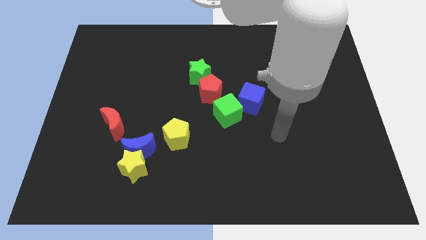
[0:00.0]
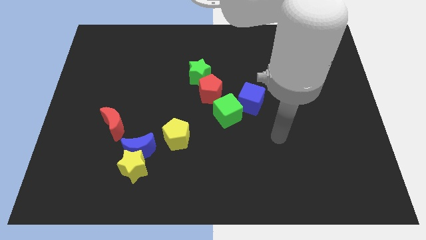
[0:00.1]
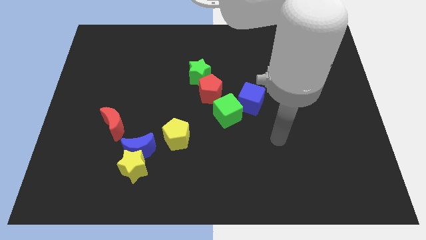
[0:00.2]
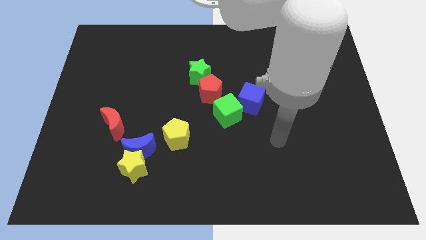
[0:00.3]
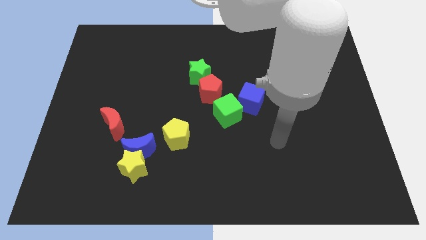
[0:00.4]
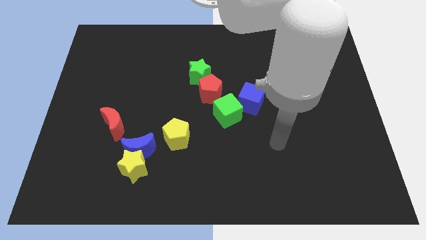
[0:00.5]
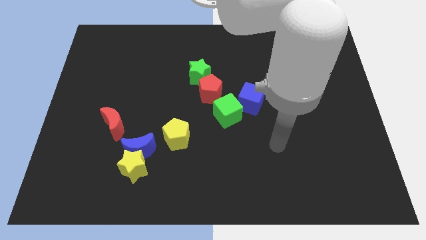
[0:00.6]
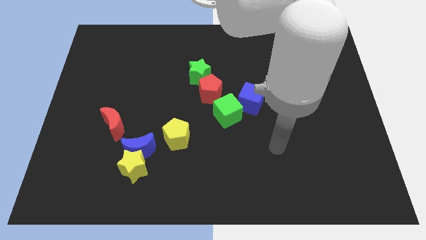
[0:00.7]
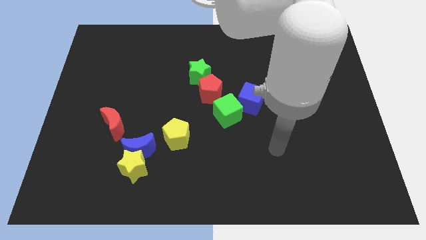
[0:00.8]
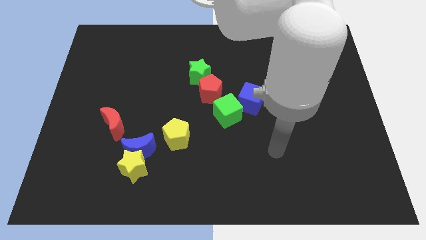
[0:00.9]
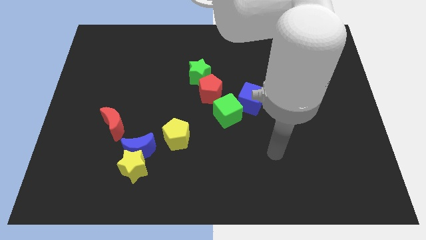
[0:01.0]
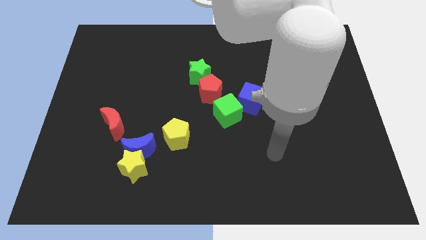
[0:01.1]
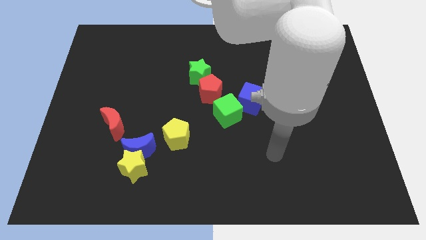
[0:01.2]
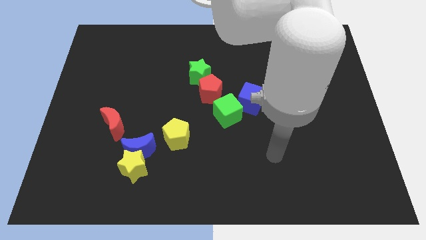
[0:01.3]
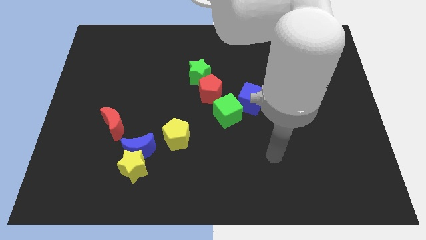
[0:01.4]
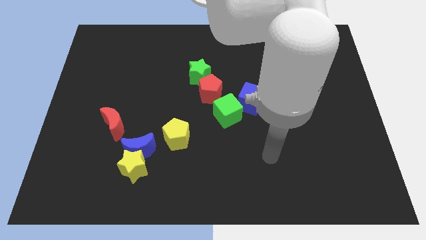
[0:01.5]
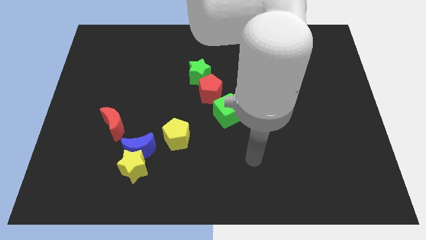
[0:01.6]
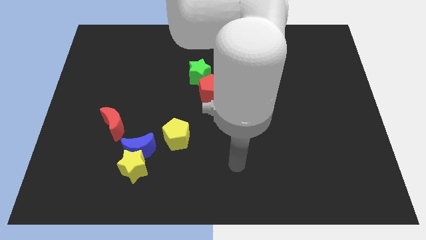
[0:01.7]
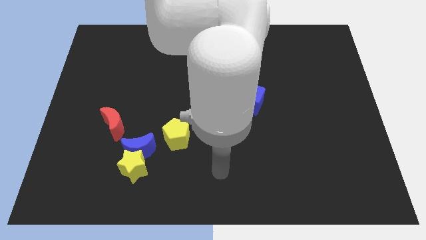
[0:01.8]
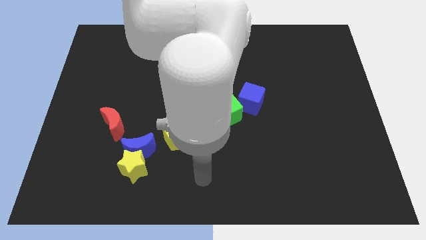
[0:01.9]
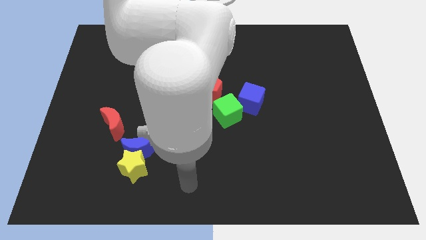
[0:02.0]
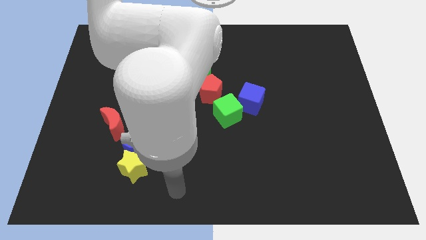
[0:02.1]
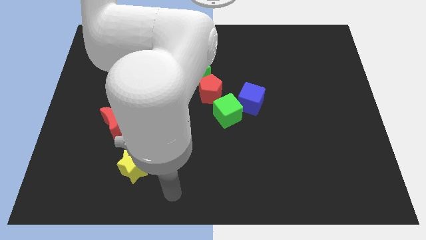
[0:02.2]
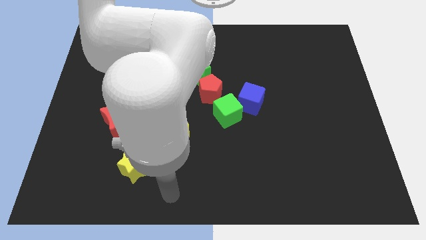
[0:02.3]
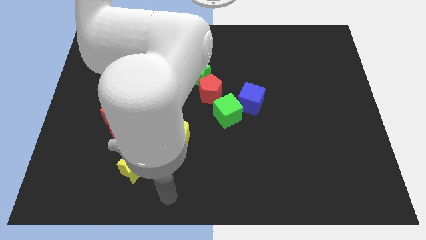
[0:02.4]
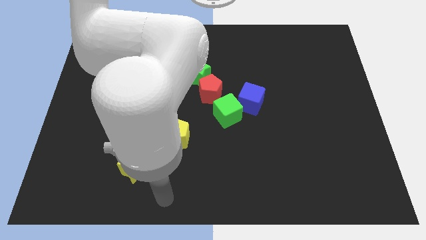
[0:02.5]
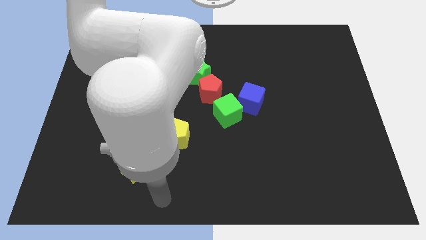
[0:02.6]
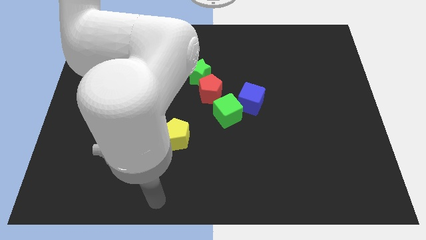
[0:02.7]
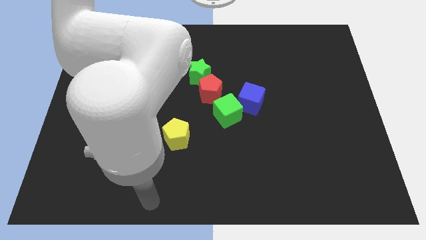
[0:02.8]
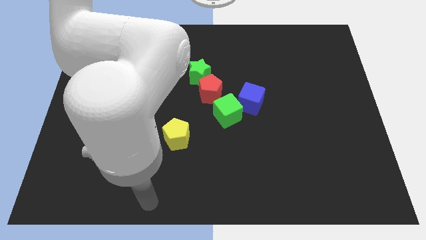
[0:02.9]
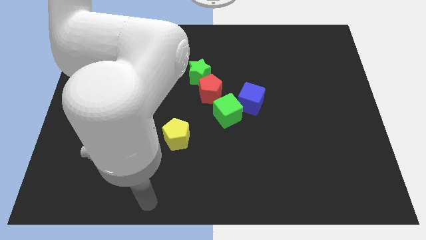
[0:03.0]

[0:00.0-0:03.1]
move your arm to the bottom of the board

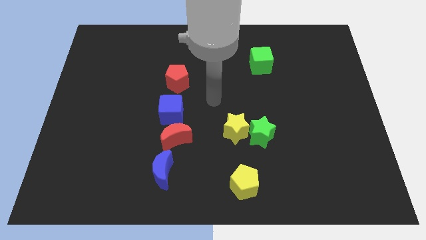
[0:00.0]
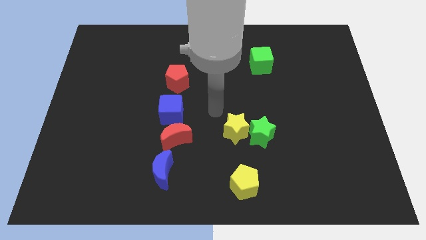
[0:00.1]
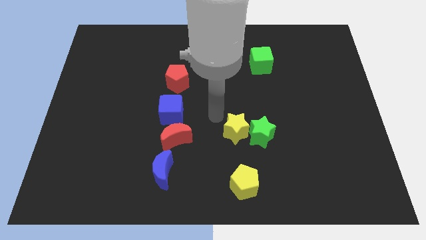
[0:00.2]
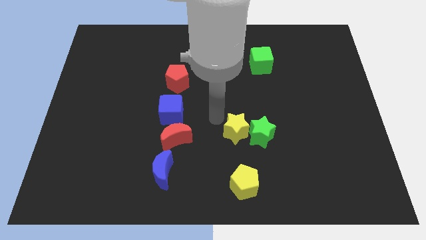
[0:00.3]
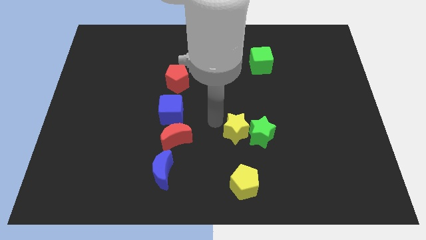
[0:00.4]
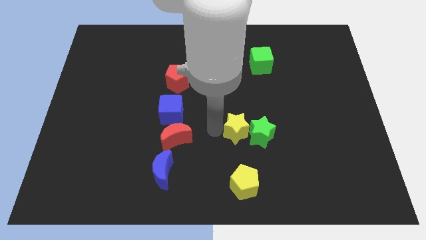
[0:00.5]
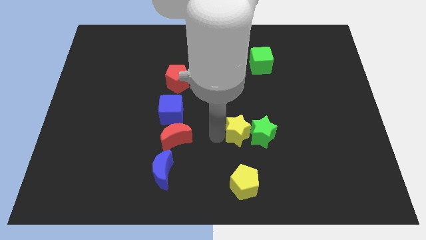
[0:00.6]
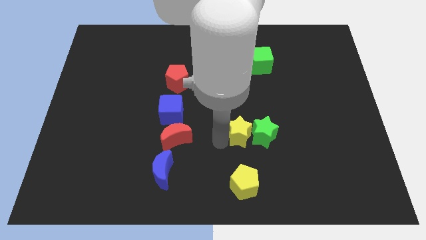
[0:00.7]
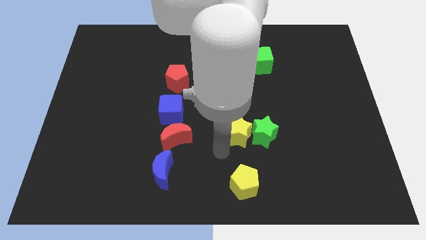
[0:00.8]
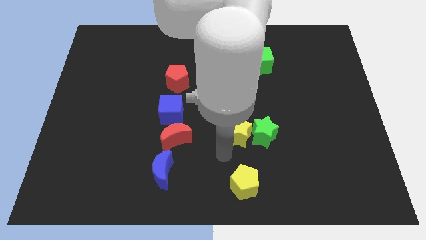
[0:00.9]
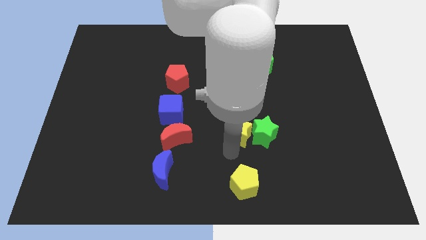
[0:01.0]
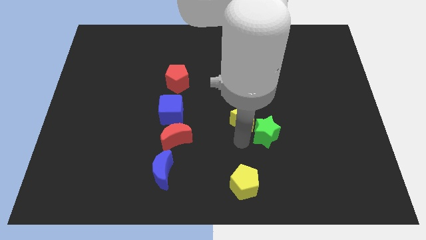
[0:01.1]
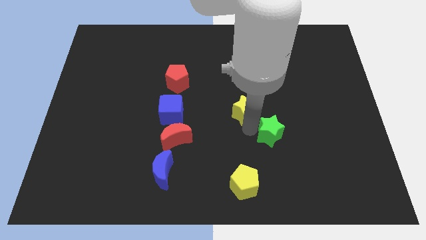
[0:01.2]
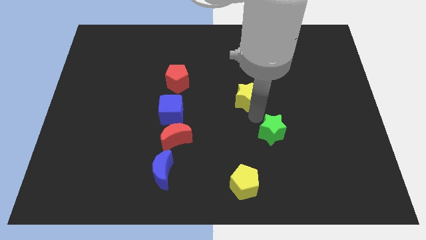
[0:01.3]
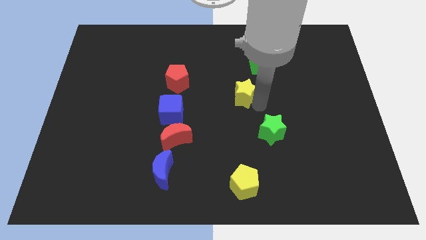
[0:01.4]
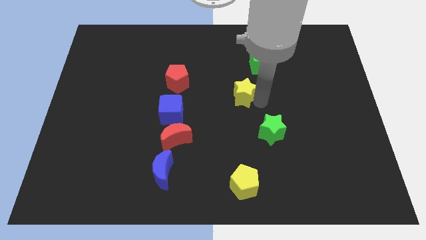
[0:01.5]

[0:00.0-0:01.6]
separate the yellow star from the green star

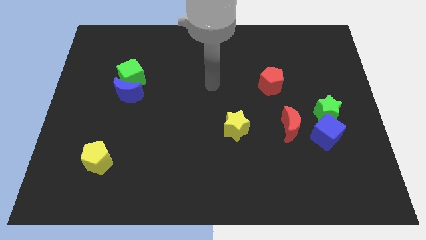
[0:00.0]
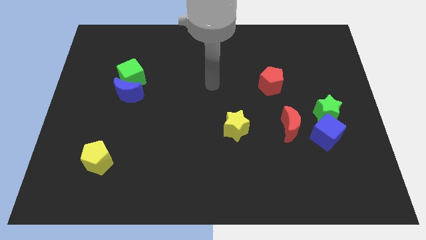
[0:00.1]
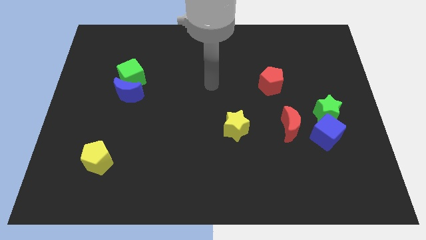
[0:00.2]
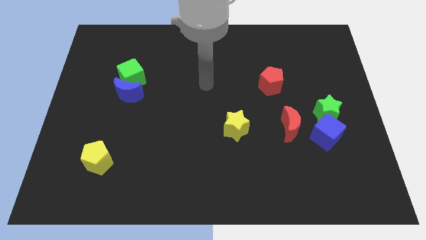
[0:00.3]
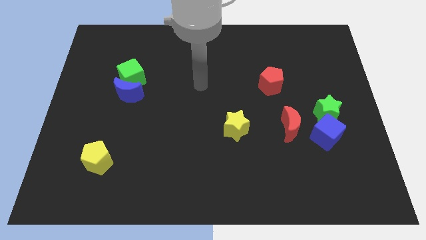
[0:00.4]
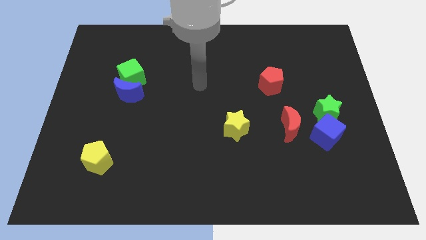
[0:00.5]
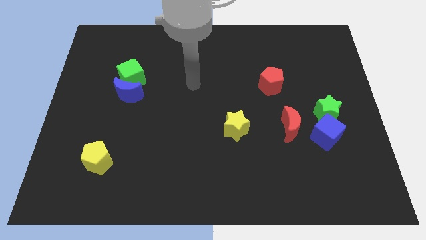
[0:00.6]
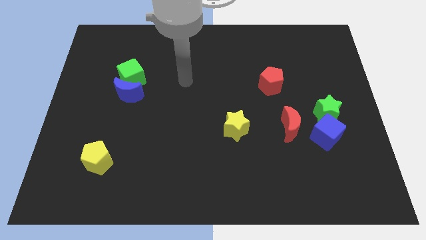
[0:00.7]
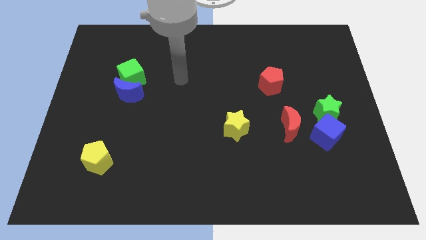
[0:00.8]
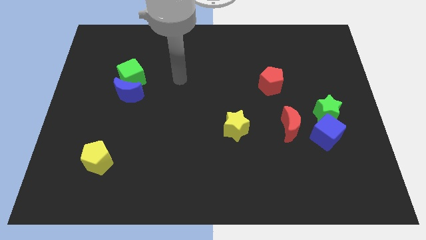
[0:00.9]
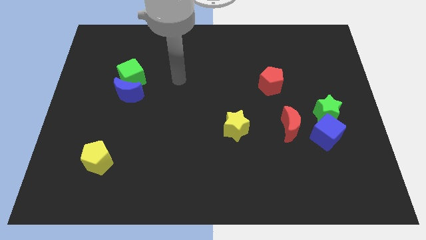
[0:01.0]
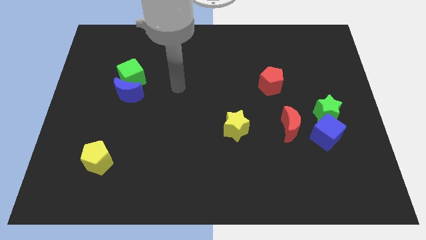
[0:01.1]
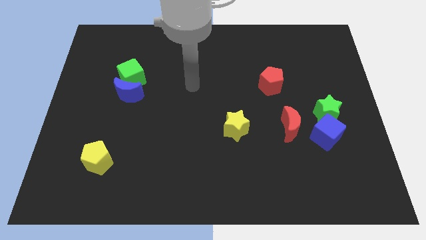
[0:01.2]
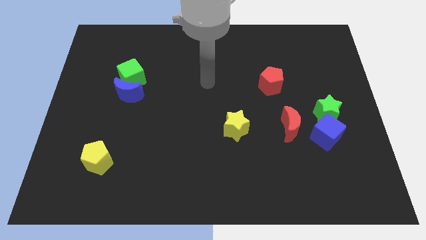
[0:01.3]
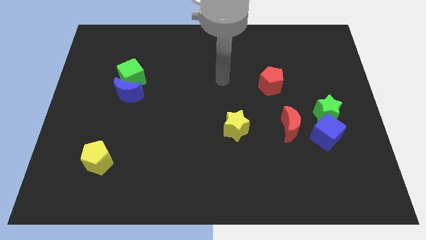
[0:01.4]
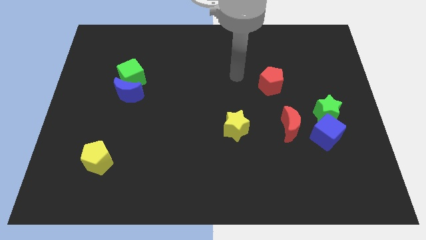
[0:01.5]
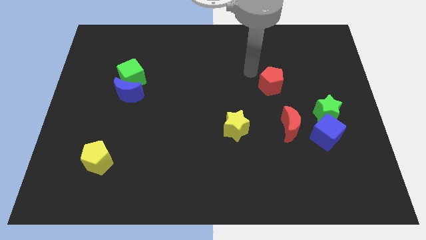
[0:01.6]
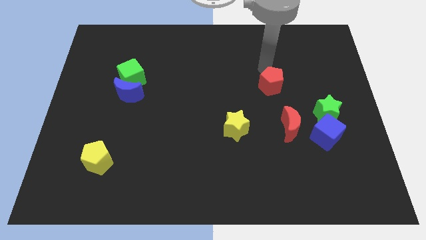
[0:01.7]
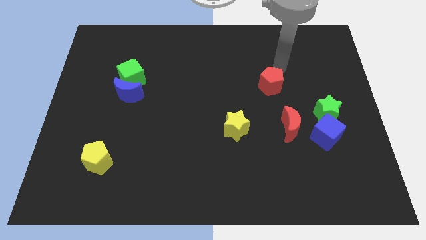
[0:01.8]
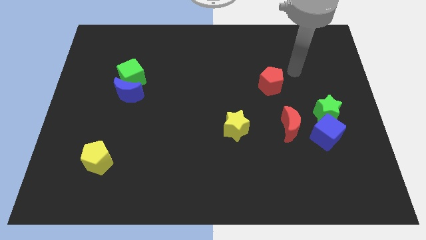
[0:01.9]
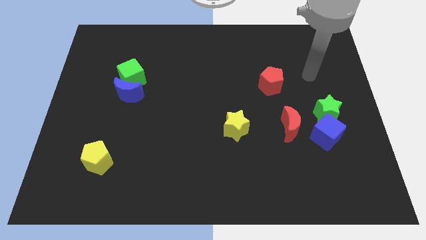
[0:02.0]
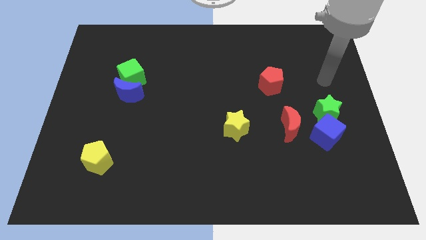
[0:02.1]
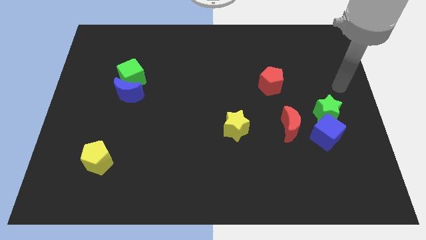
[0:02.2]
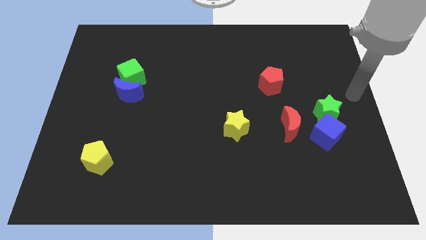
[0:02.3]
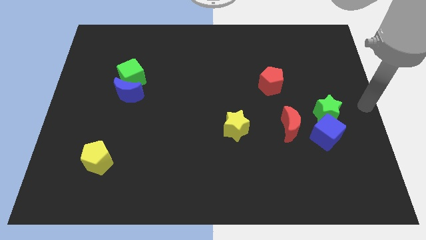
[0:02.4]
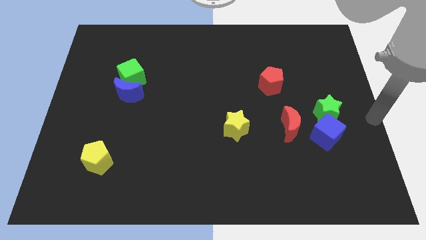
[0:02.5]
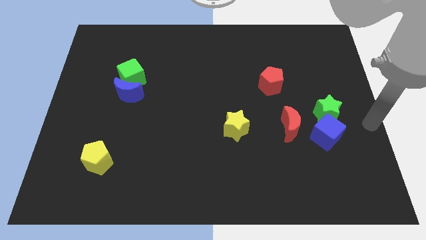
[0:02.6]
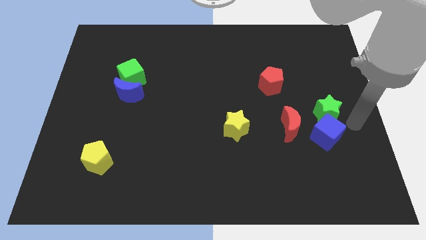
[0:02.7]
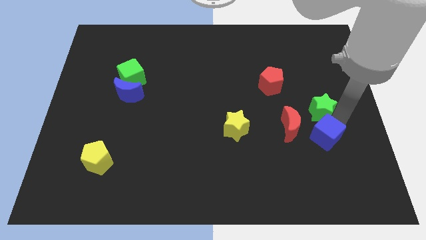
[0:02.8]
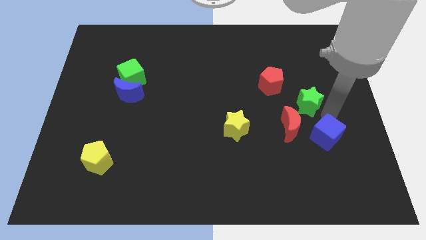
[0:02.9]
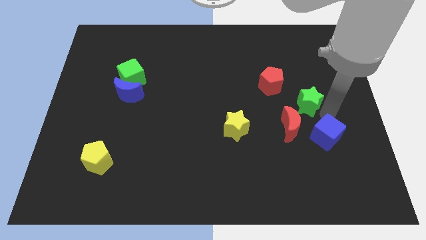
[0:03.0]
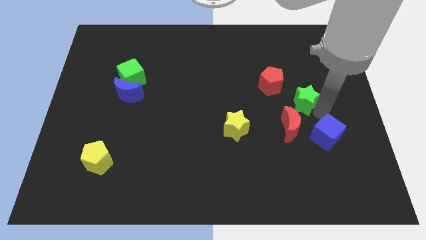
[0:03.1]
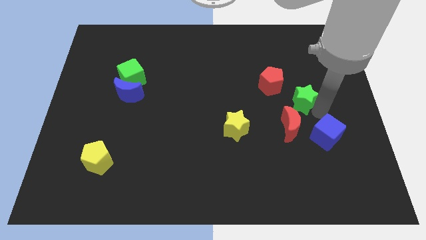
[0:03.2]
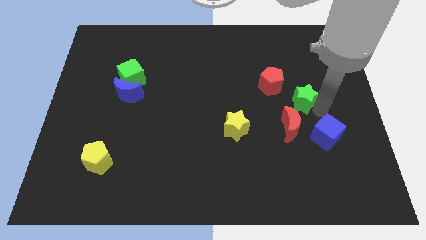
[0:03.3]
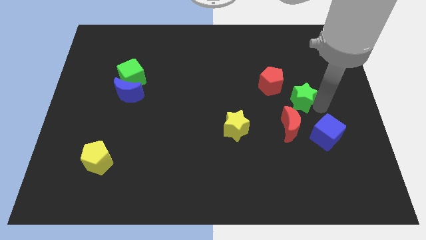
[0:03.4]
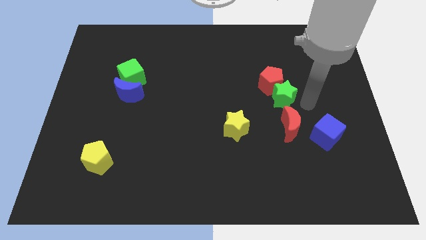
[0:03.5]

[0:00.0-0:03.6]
place the green star in between the blue cube and red pentagon

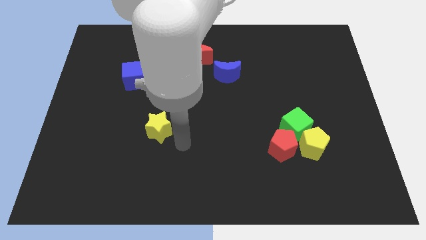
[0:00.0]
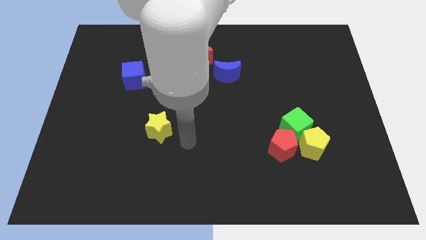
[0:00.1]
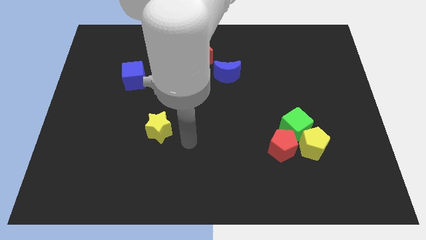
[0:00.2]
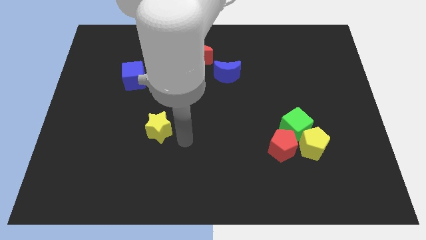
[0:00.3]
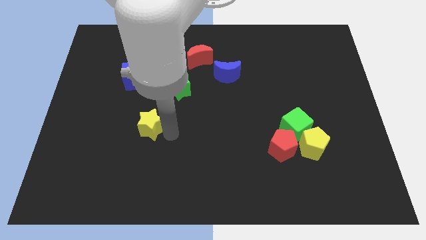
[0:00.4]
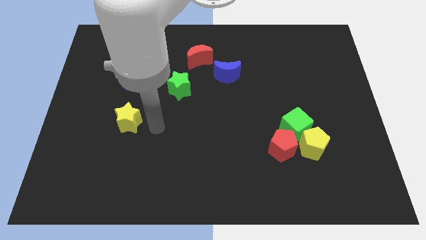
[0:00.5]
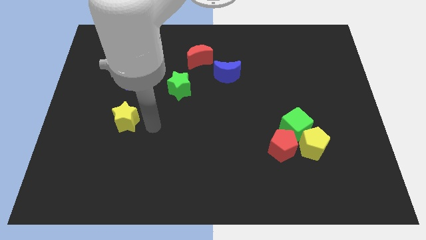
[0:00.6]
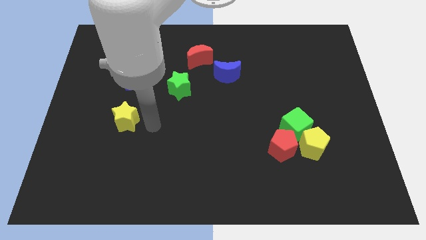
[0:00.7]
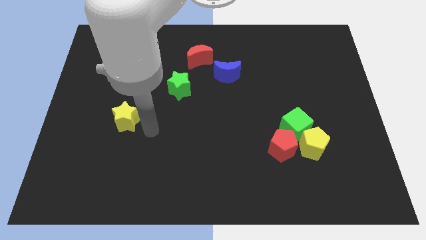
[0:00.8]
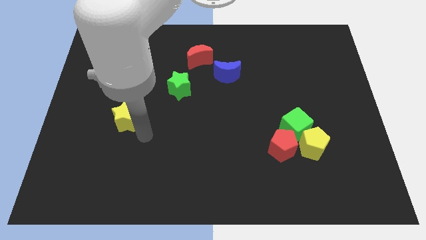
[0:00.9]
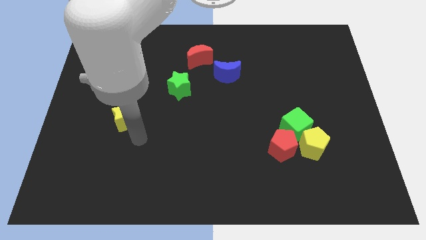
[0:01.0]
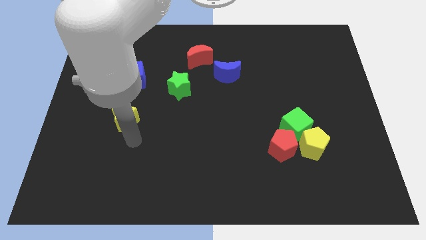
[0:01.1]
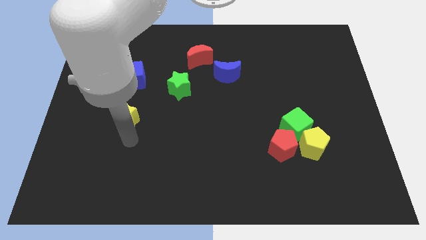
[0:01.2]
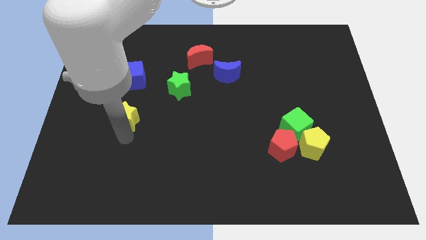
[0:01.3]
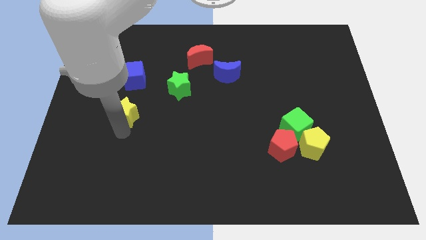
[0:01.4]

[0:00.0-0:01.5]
move the yellow star down to the blue cube
